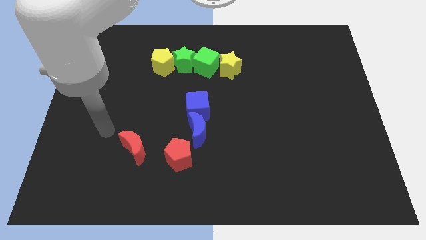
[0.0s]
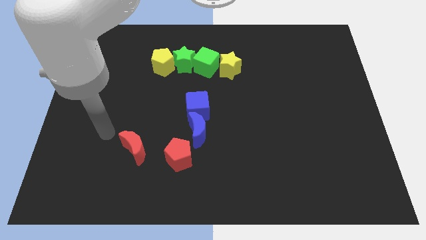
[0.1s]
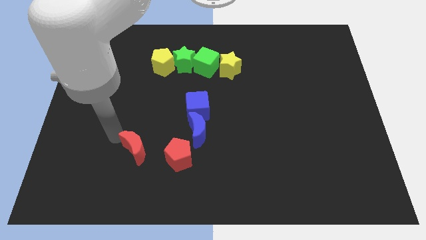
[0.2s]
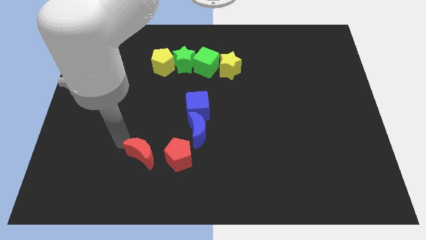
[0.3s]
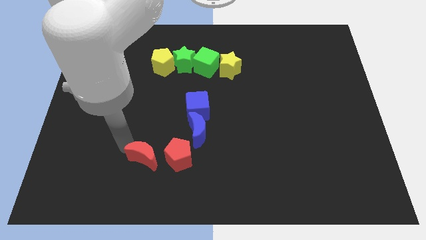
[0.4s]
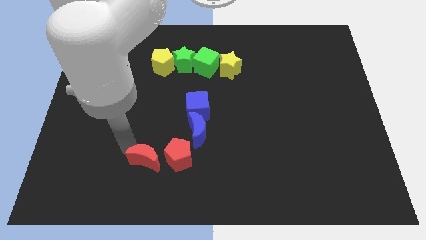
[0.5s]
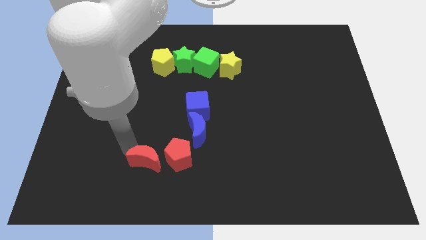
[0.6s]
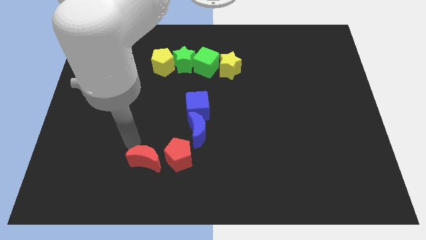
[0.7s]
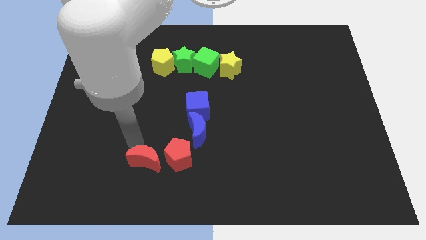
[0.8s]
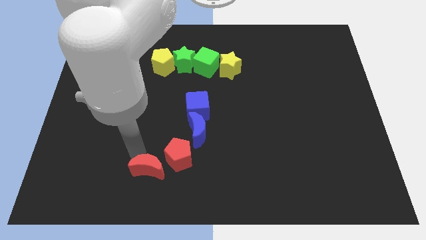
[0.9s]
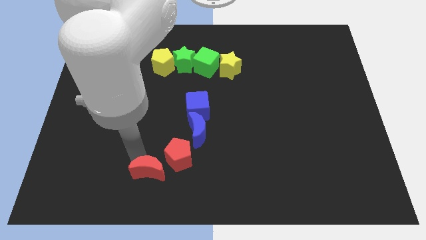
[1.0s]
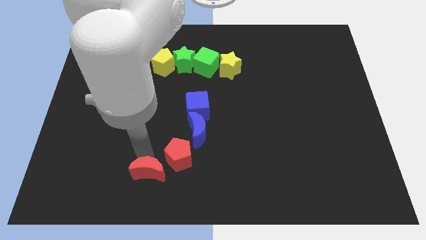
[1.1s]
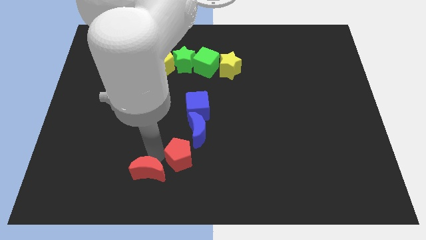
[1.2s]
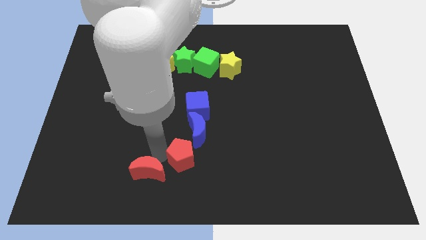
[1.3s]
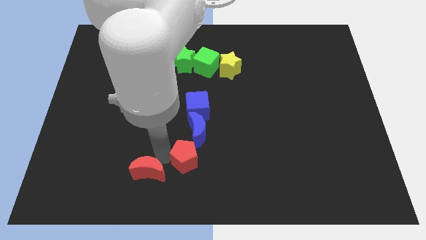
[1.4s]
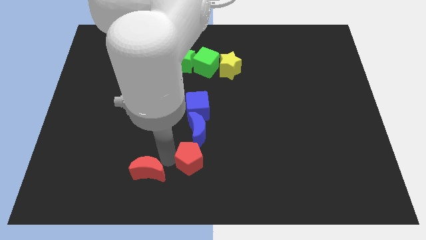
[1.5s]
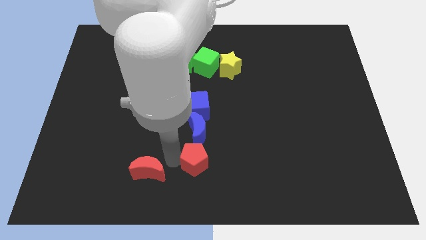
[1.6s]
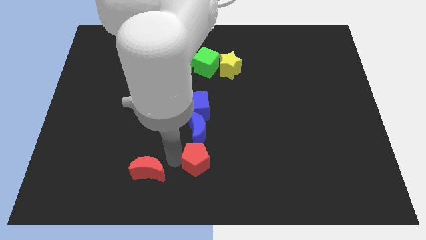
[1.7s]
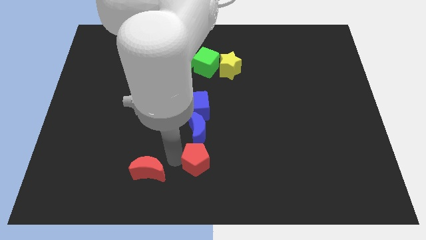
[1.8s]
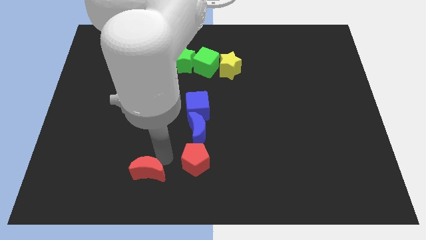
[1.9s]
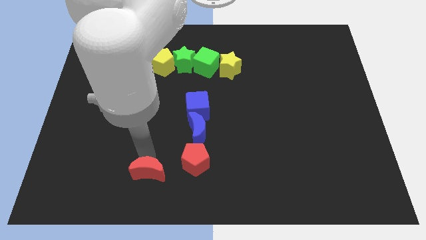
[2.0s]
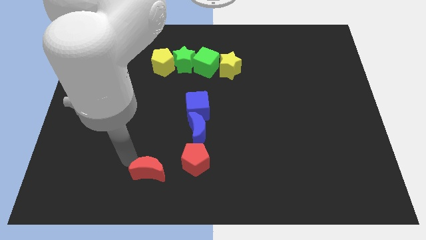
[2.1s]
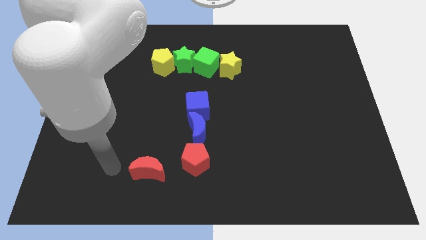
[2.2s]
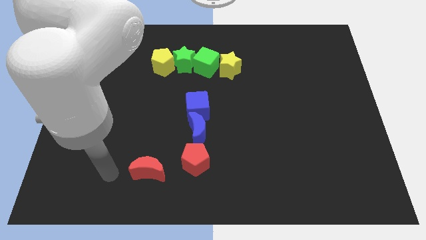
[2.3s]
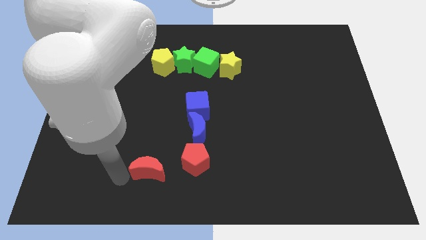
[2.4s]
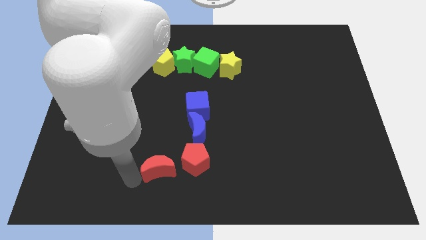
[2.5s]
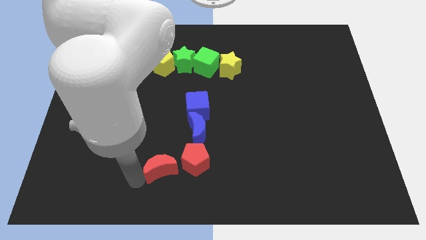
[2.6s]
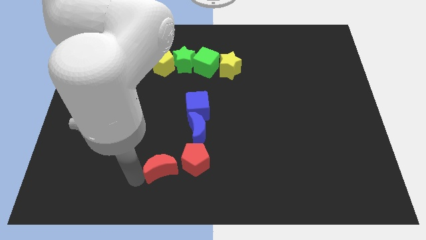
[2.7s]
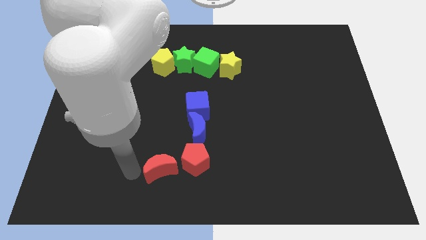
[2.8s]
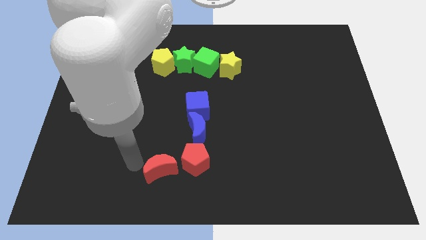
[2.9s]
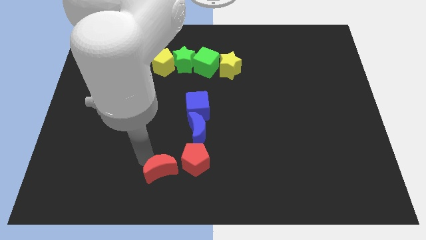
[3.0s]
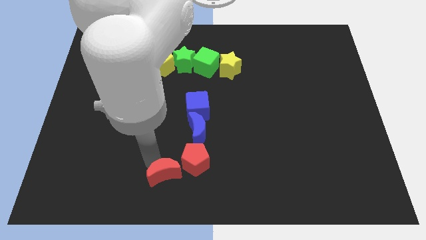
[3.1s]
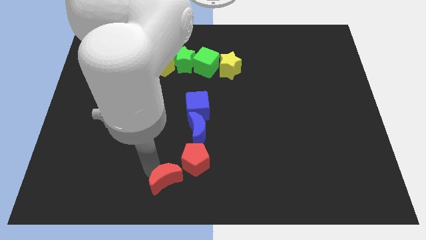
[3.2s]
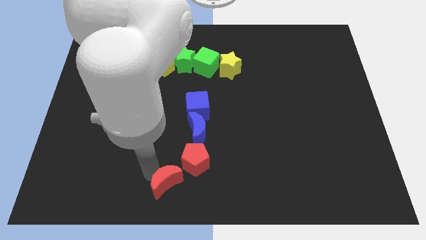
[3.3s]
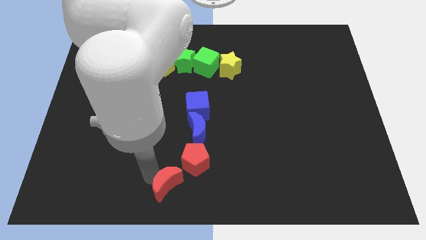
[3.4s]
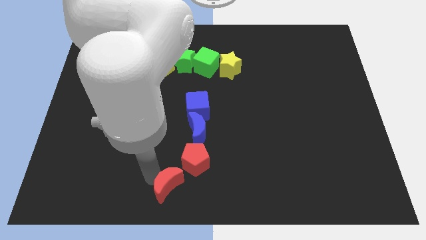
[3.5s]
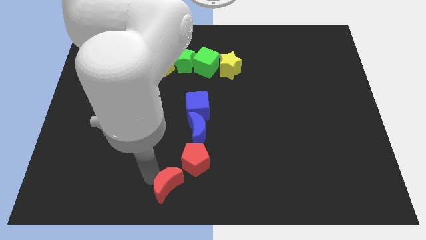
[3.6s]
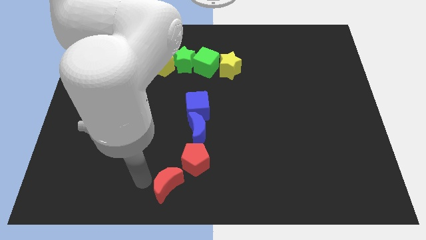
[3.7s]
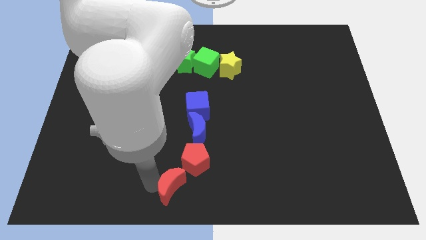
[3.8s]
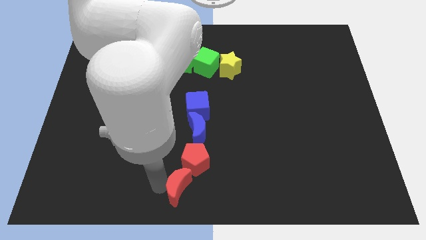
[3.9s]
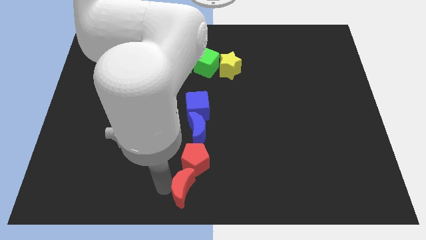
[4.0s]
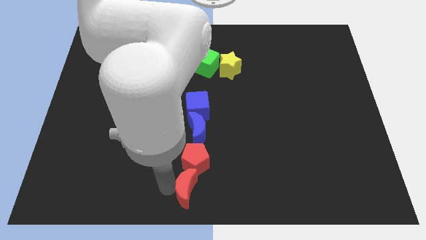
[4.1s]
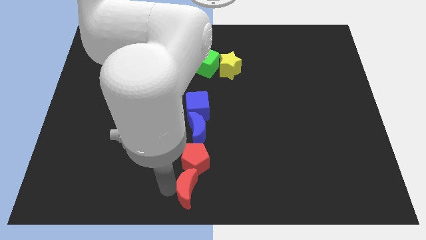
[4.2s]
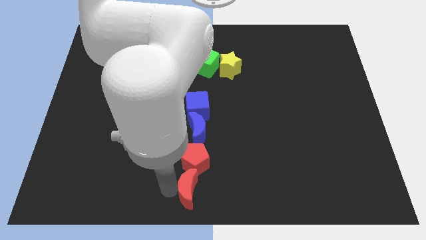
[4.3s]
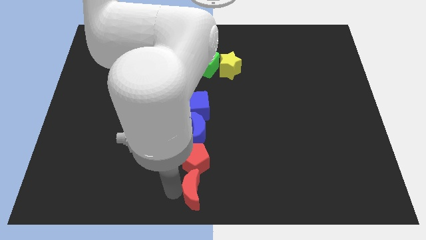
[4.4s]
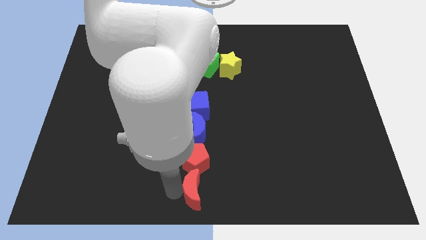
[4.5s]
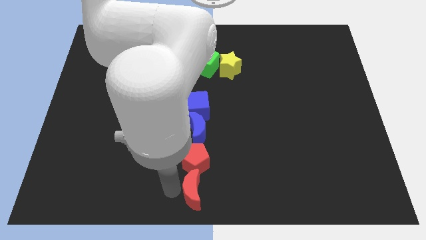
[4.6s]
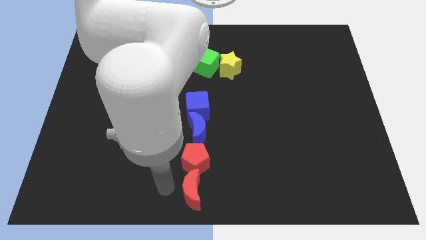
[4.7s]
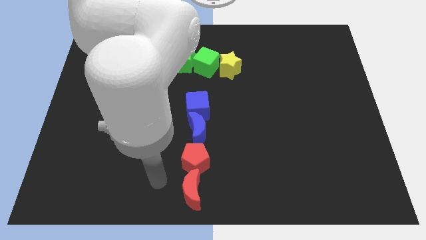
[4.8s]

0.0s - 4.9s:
move the red crescent to the bottom of the red pentagon

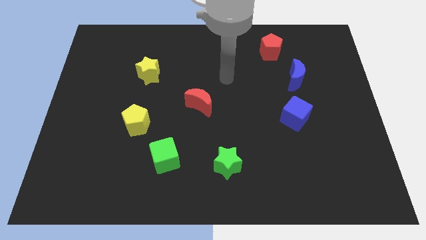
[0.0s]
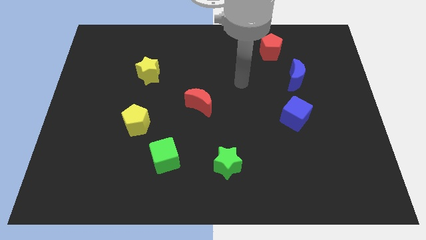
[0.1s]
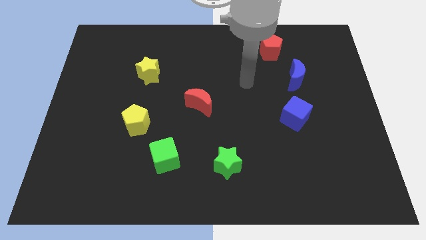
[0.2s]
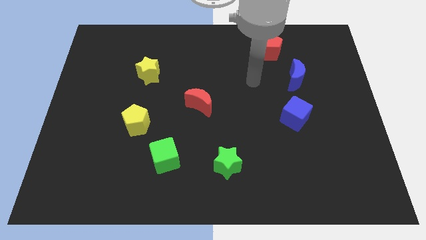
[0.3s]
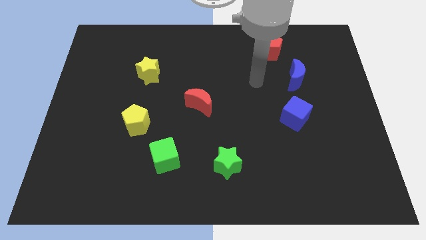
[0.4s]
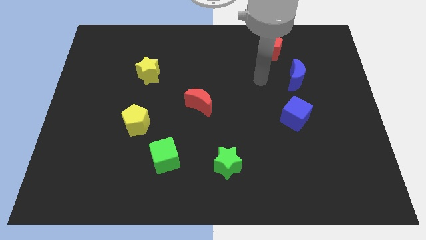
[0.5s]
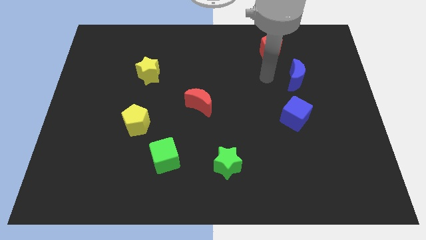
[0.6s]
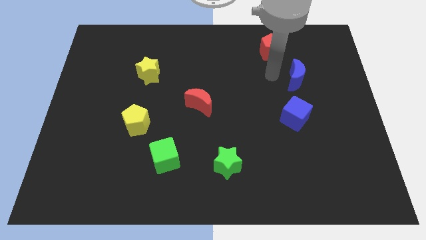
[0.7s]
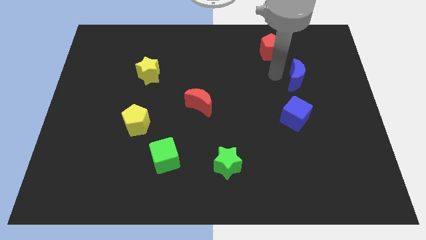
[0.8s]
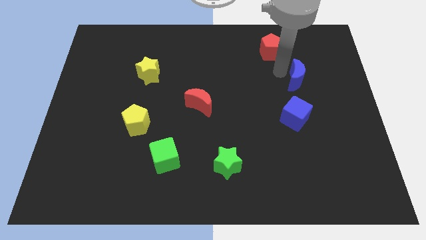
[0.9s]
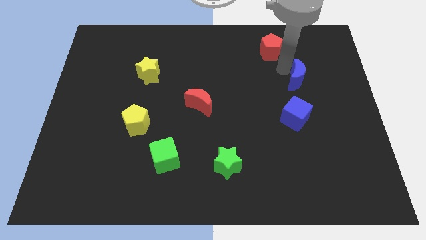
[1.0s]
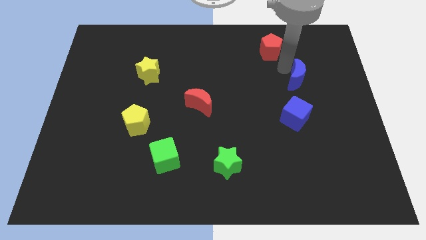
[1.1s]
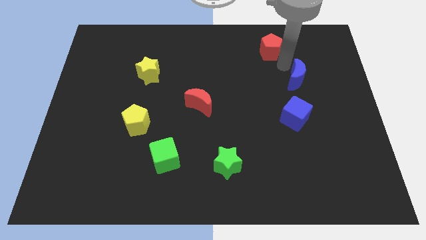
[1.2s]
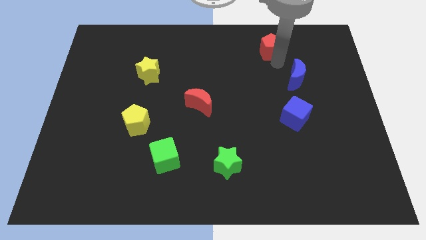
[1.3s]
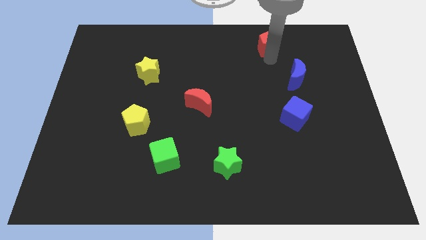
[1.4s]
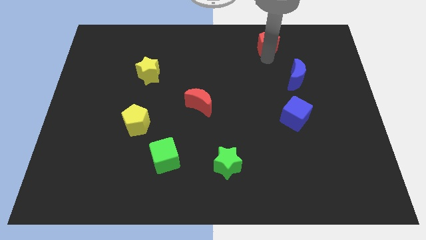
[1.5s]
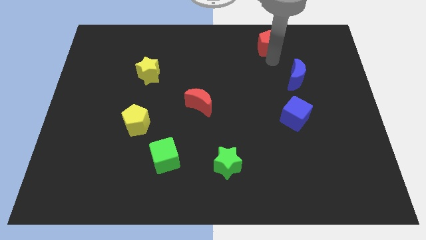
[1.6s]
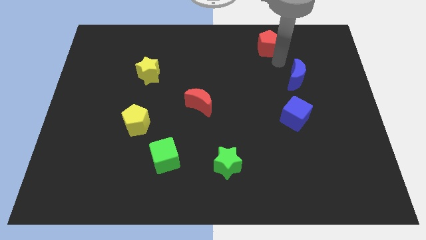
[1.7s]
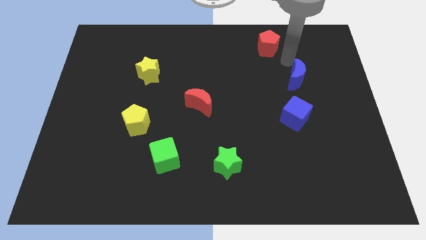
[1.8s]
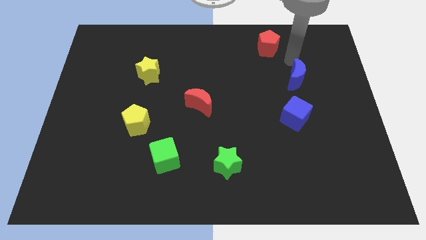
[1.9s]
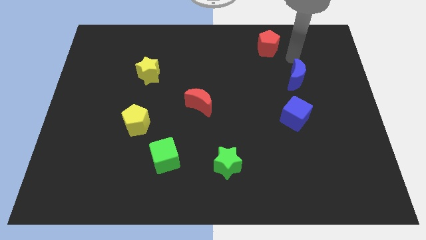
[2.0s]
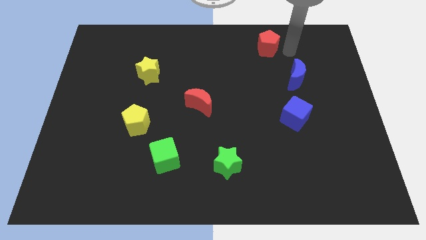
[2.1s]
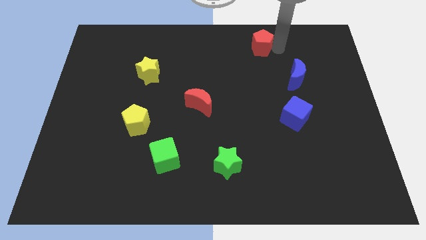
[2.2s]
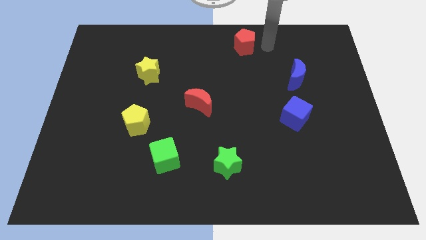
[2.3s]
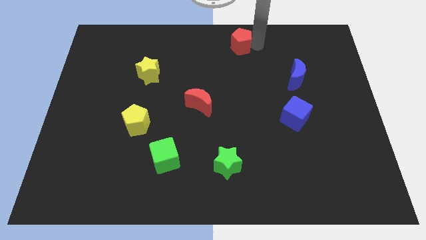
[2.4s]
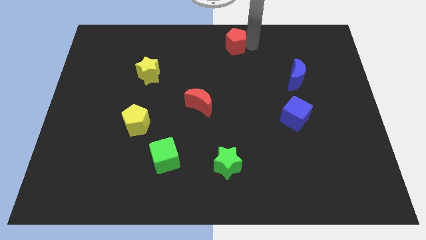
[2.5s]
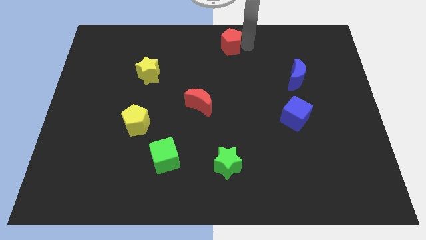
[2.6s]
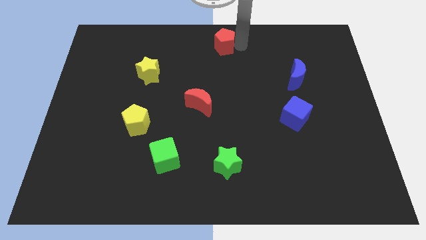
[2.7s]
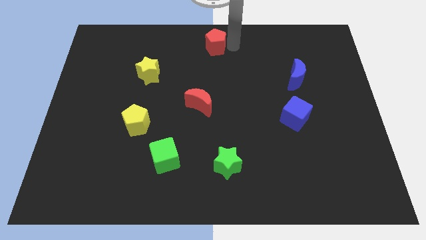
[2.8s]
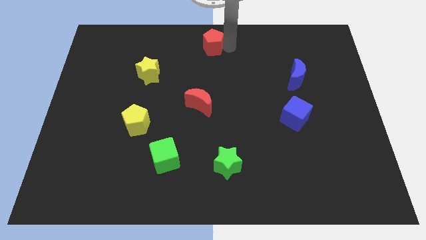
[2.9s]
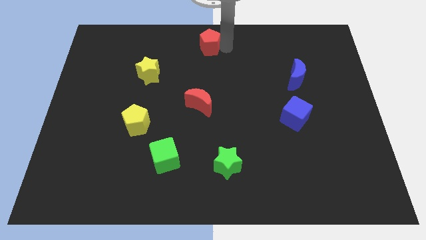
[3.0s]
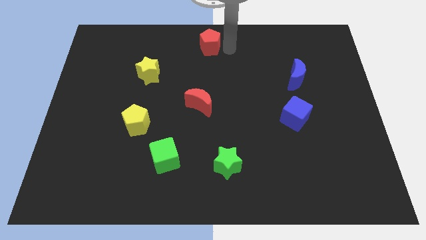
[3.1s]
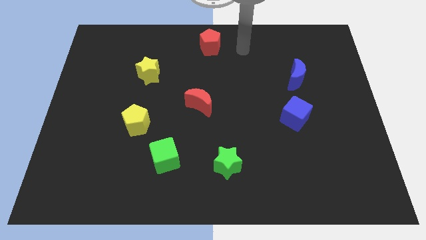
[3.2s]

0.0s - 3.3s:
place the red pentagon at the tpo center of the table

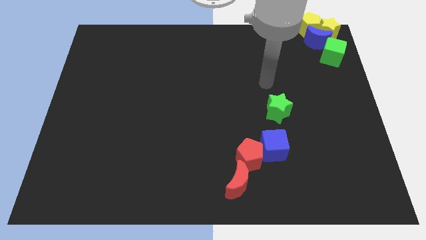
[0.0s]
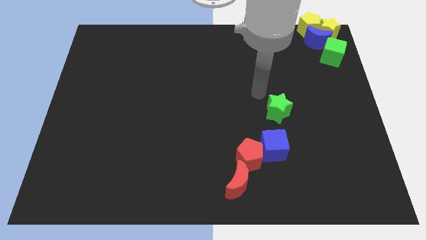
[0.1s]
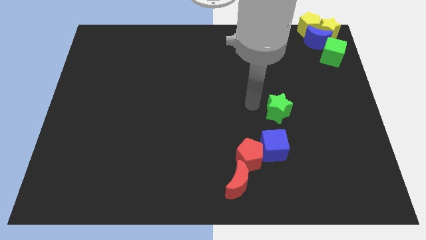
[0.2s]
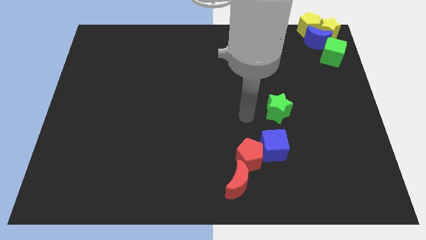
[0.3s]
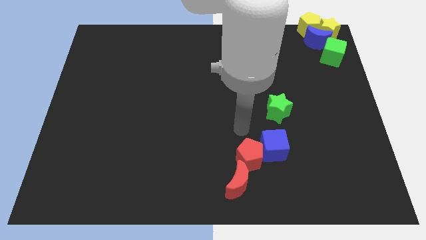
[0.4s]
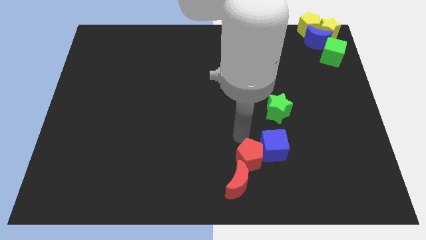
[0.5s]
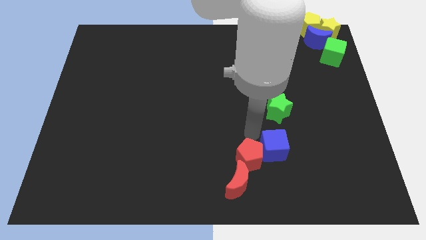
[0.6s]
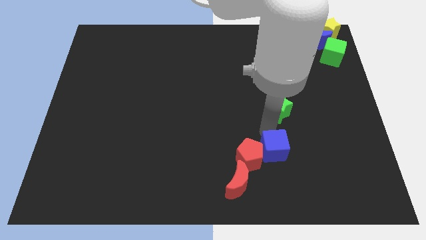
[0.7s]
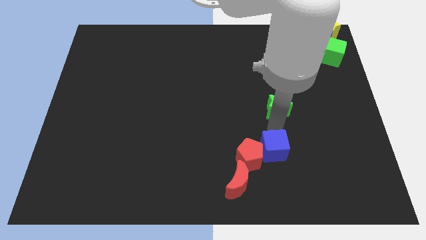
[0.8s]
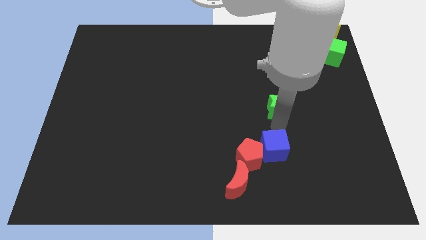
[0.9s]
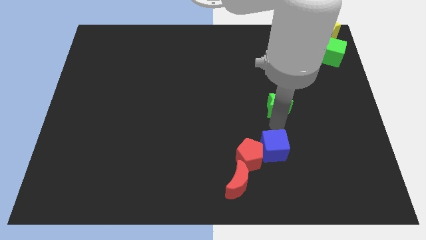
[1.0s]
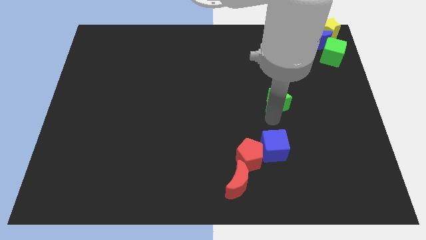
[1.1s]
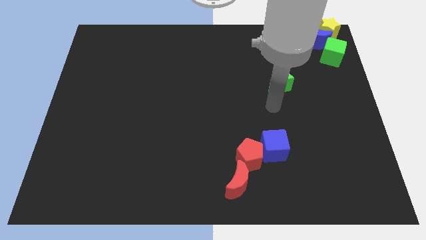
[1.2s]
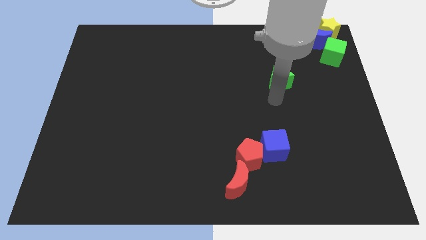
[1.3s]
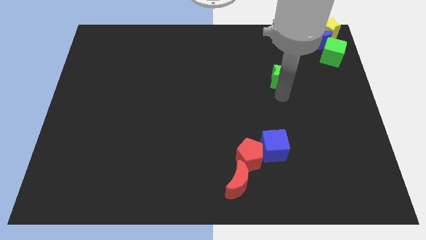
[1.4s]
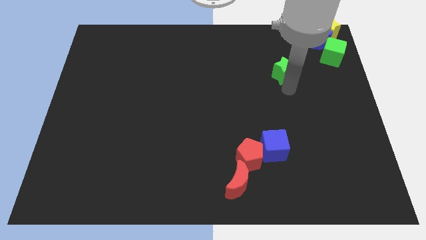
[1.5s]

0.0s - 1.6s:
push the green star slightly to the top side of the board
